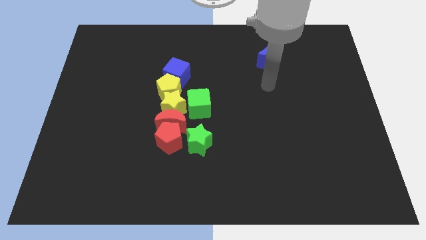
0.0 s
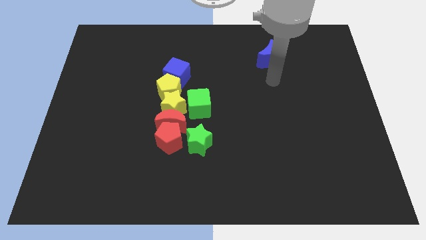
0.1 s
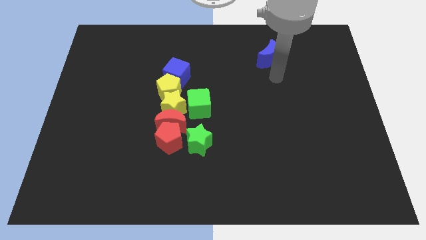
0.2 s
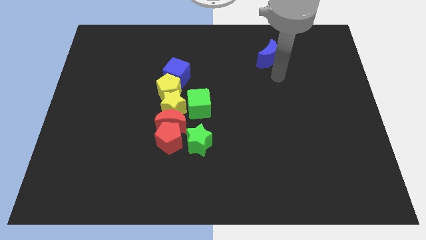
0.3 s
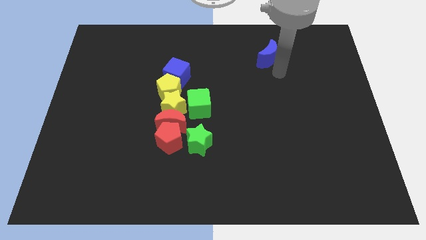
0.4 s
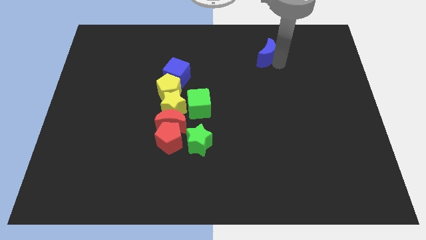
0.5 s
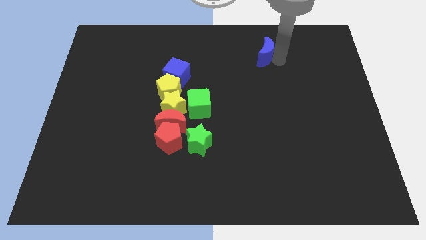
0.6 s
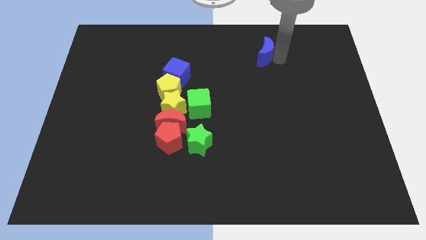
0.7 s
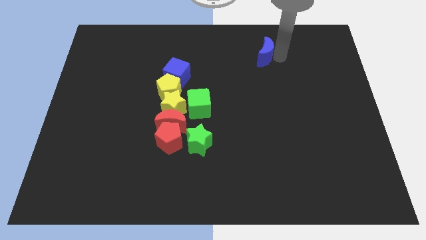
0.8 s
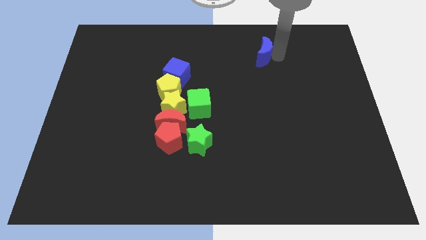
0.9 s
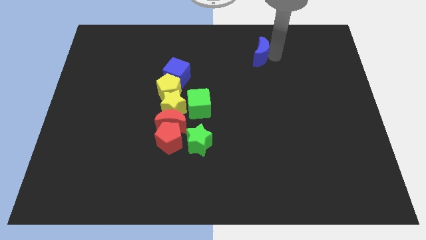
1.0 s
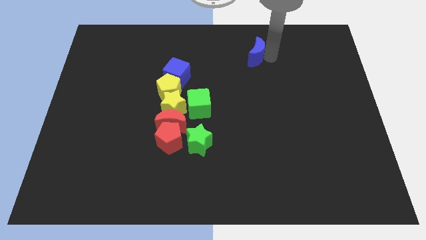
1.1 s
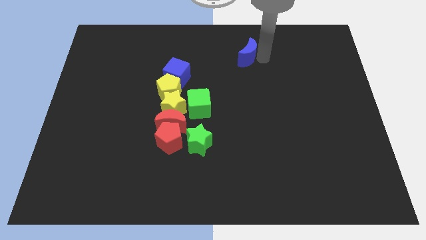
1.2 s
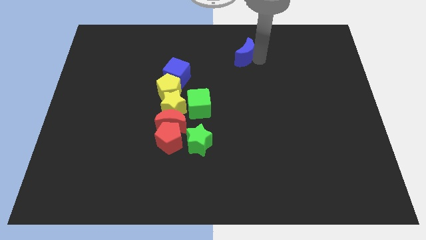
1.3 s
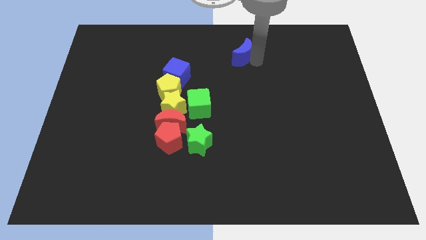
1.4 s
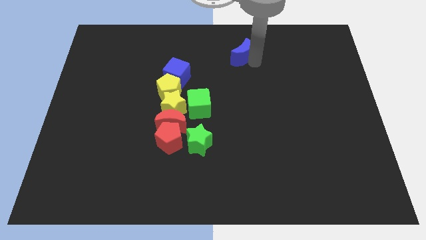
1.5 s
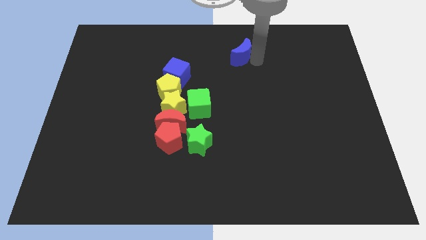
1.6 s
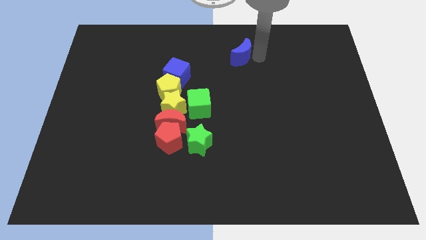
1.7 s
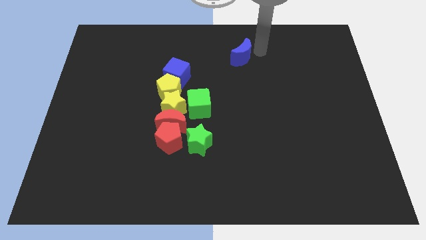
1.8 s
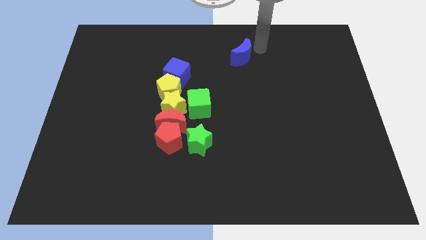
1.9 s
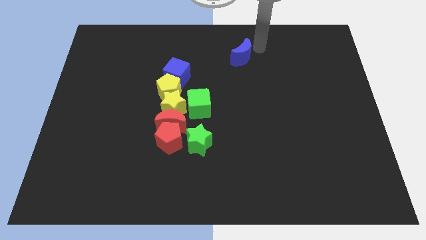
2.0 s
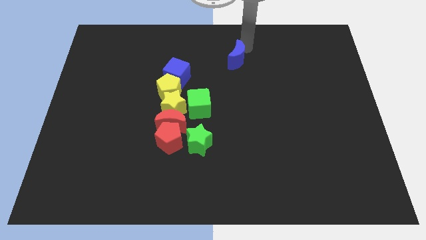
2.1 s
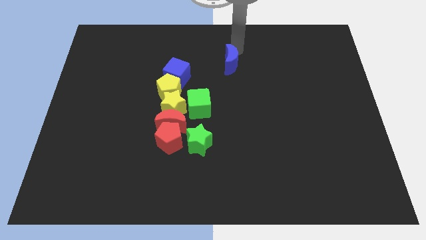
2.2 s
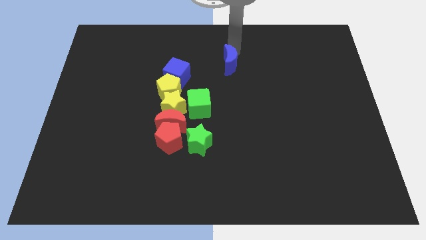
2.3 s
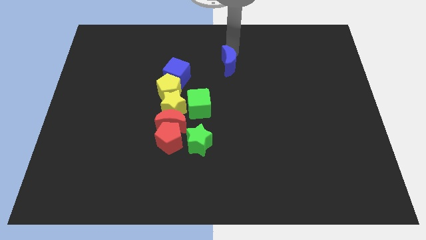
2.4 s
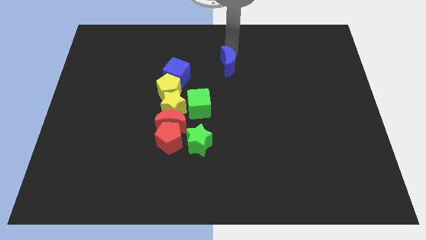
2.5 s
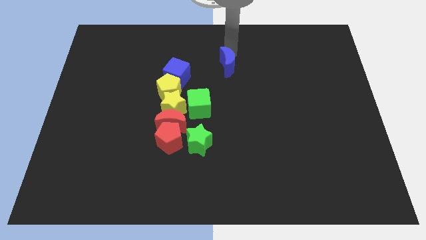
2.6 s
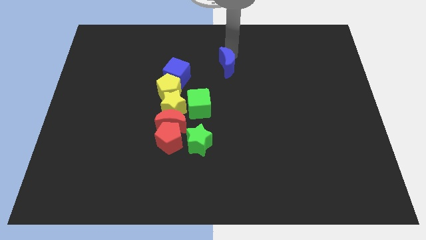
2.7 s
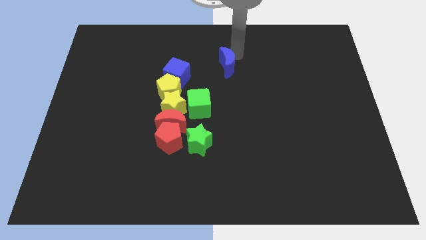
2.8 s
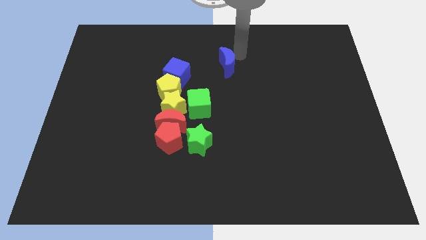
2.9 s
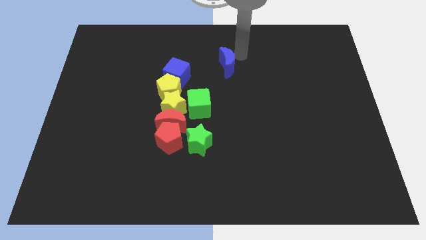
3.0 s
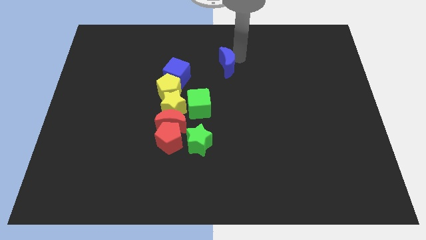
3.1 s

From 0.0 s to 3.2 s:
place the blue moon diagonally to the blue cube

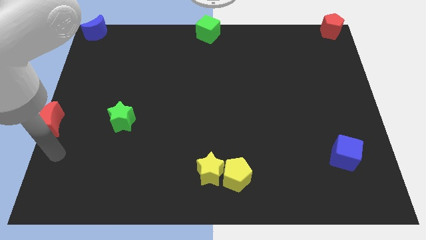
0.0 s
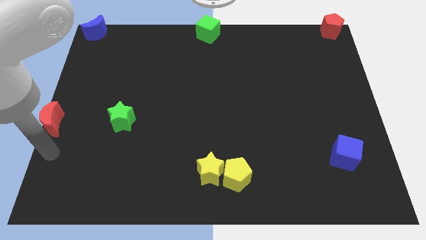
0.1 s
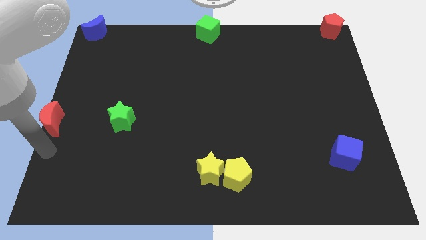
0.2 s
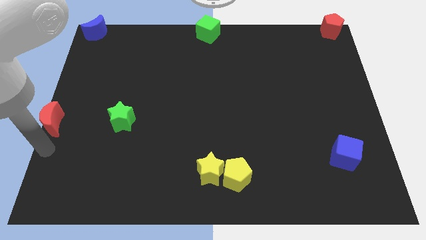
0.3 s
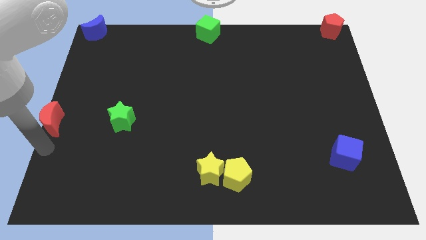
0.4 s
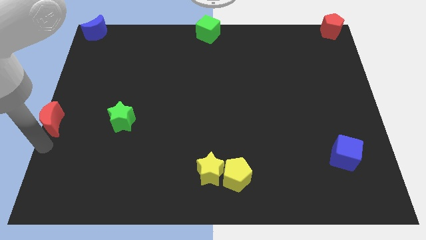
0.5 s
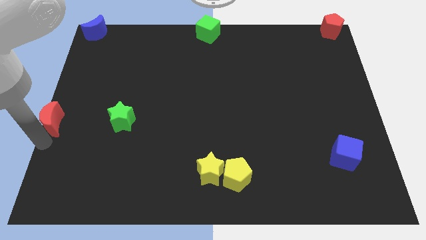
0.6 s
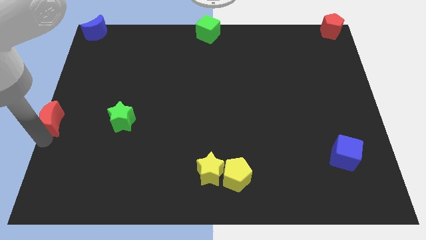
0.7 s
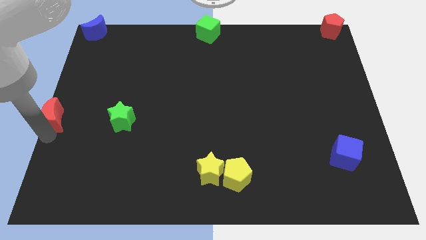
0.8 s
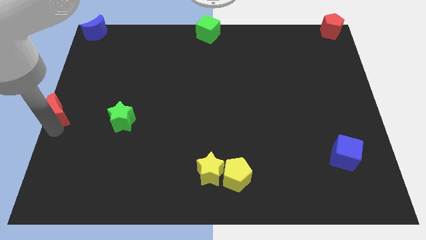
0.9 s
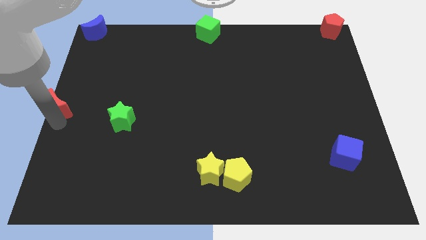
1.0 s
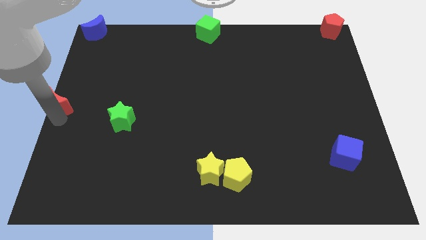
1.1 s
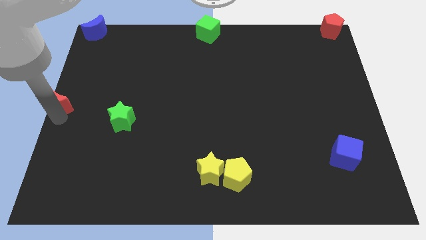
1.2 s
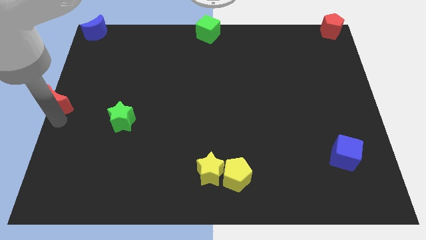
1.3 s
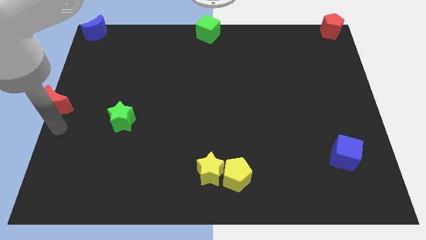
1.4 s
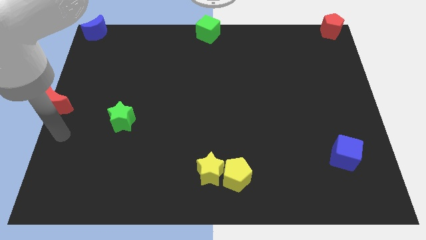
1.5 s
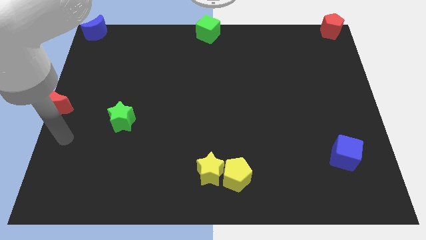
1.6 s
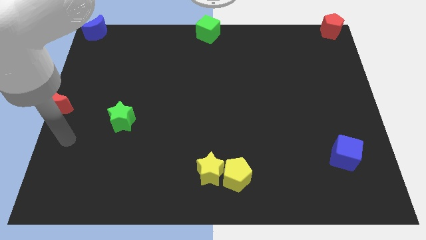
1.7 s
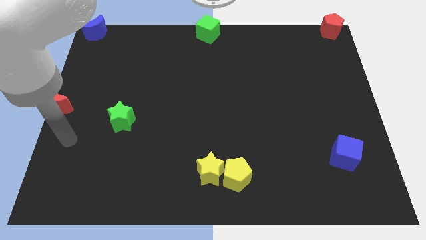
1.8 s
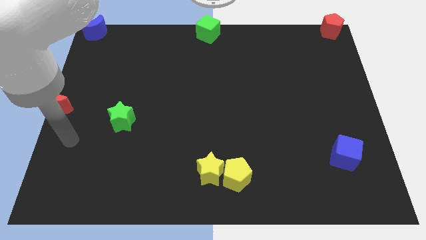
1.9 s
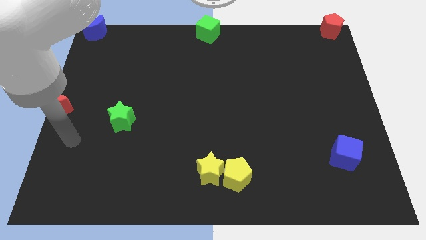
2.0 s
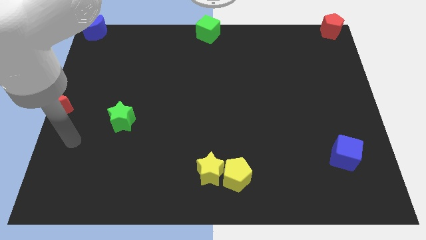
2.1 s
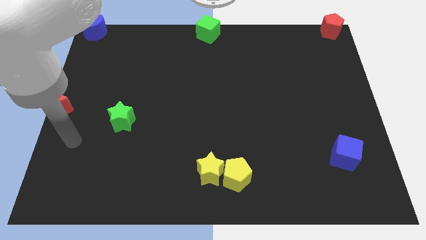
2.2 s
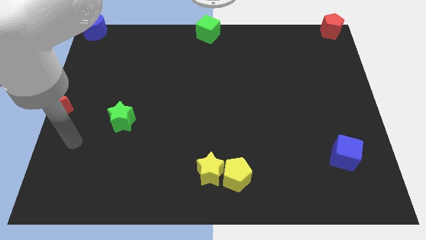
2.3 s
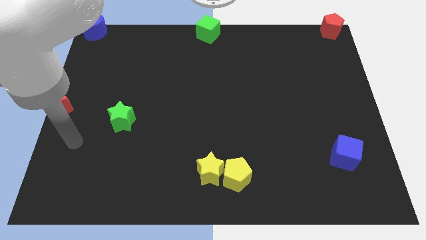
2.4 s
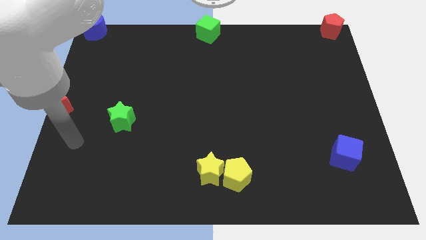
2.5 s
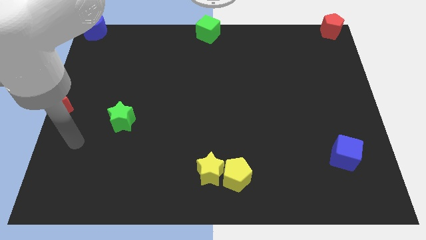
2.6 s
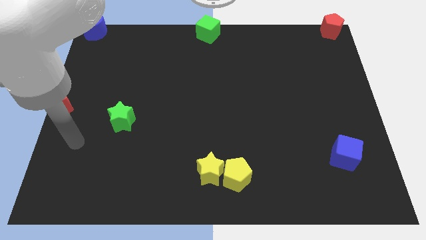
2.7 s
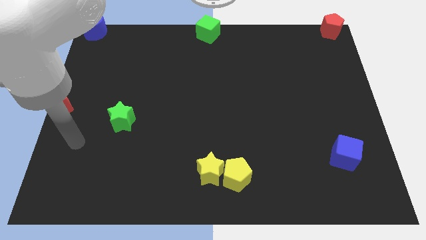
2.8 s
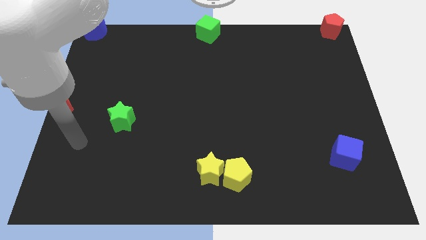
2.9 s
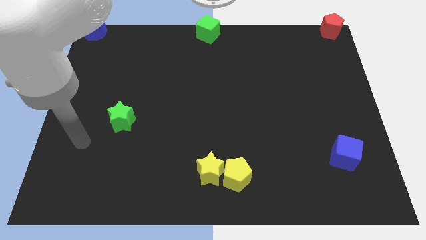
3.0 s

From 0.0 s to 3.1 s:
push the red moon upwards a bit

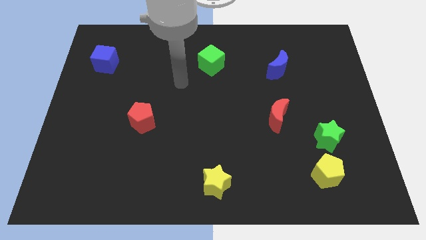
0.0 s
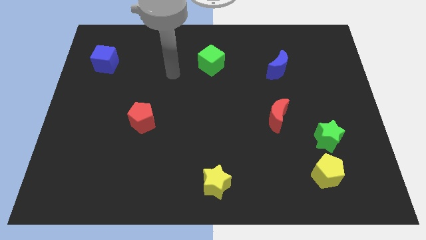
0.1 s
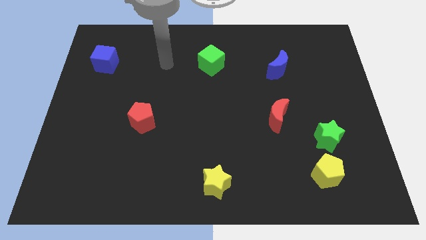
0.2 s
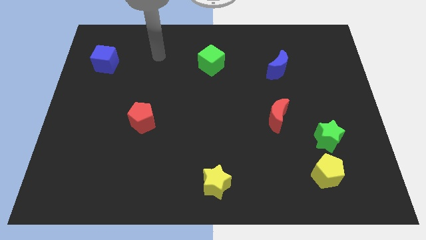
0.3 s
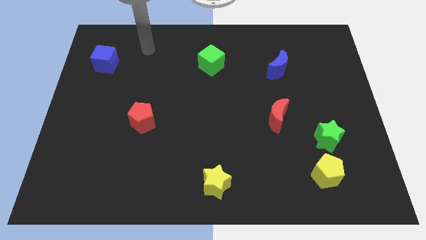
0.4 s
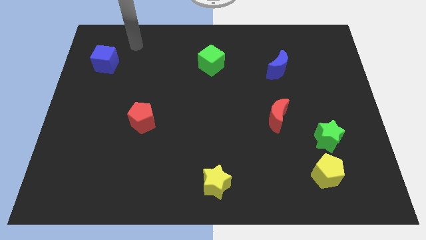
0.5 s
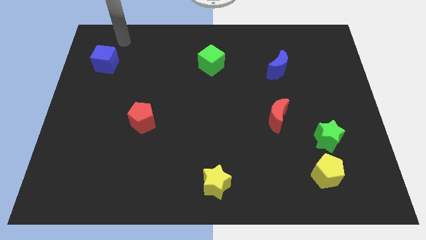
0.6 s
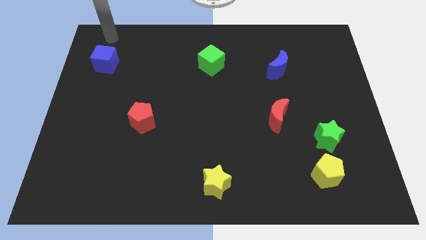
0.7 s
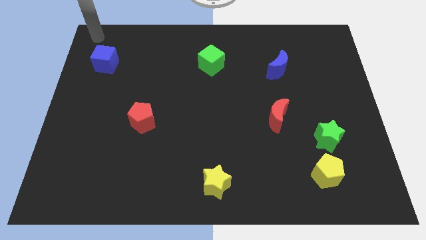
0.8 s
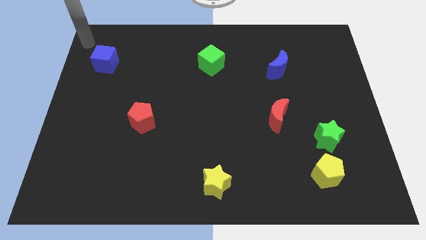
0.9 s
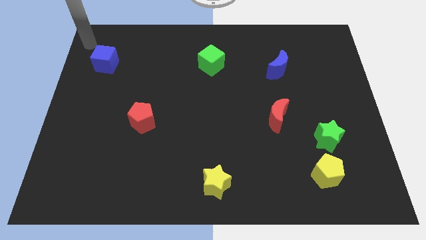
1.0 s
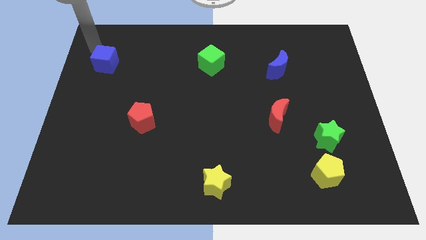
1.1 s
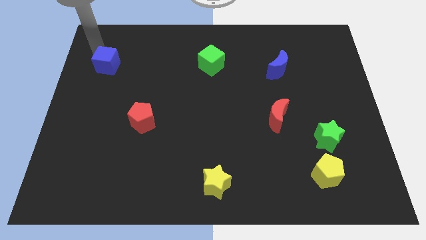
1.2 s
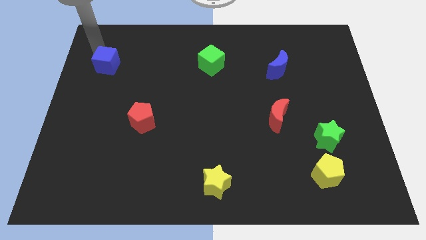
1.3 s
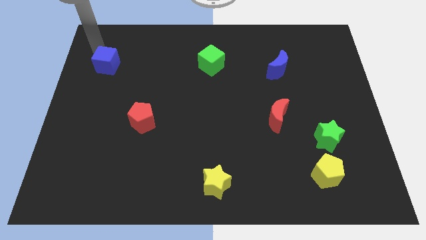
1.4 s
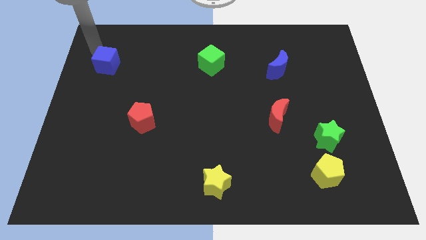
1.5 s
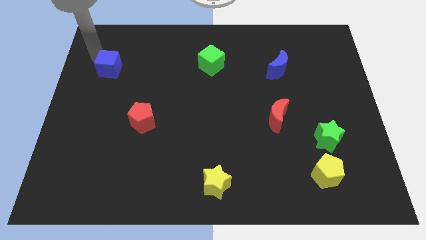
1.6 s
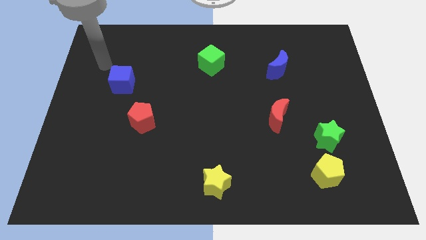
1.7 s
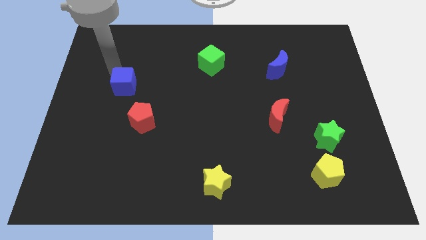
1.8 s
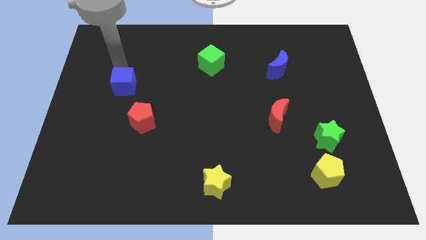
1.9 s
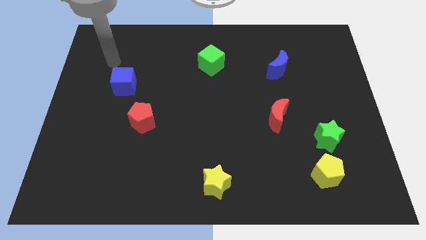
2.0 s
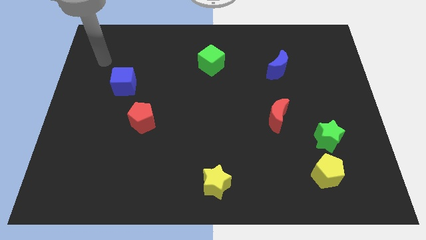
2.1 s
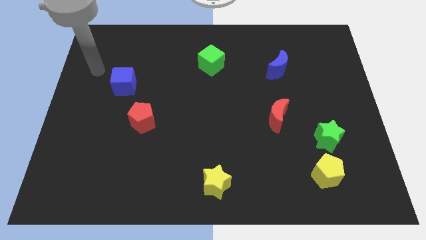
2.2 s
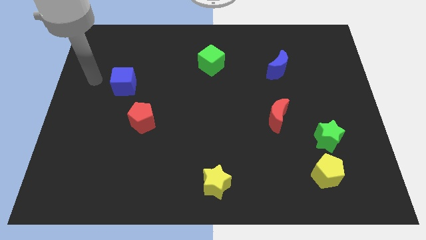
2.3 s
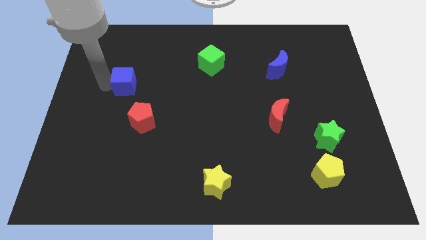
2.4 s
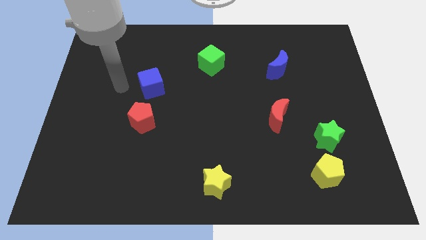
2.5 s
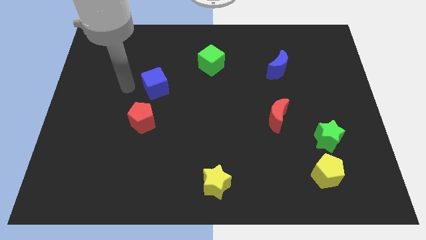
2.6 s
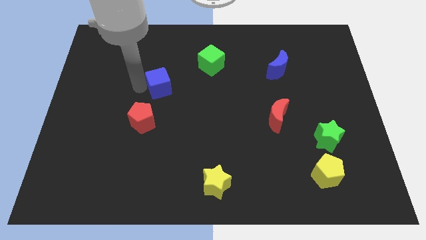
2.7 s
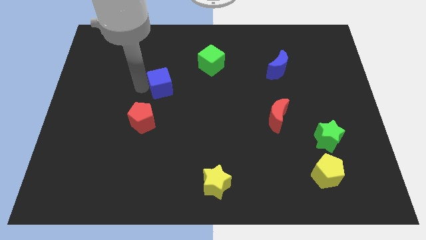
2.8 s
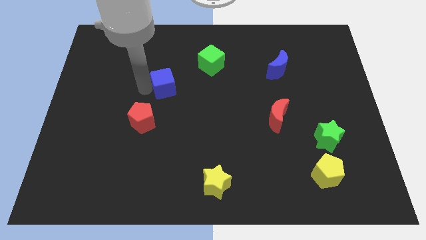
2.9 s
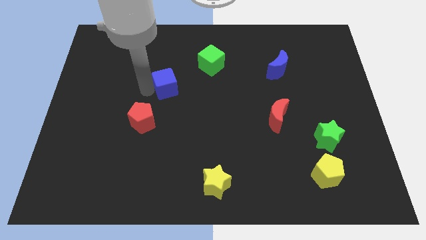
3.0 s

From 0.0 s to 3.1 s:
place blue cube to the top right of red pentagon
